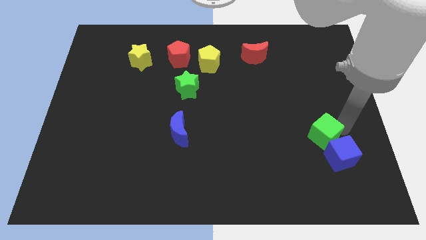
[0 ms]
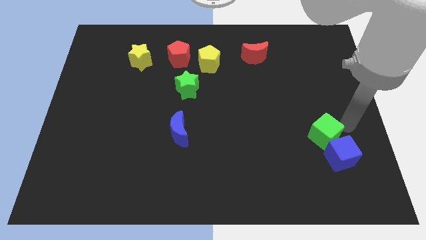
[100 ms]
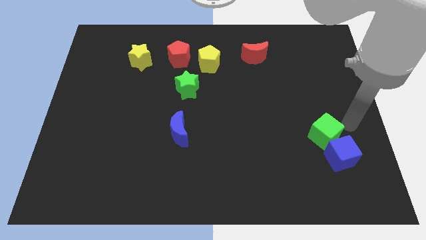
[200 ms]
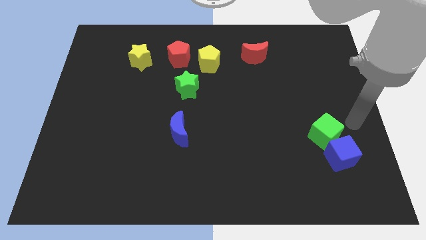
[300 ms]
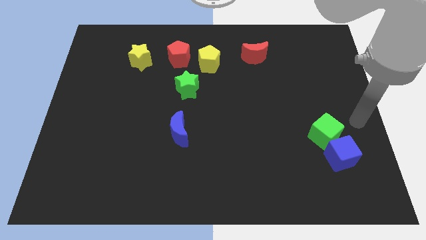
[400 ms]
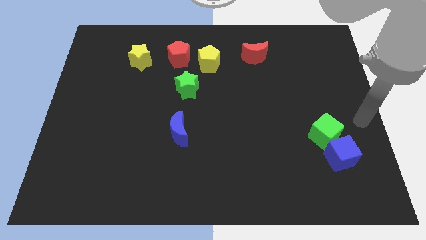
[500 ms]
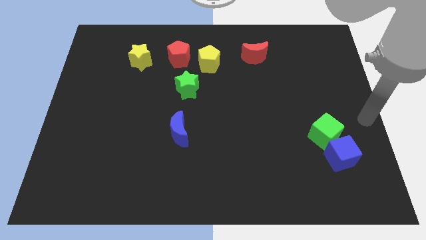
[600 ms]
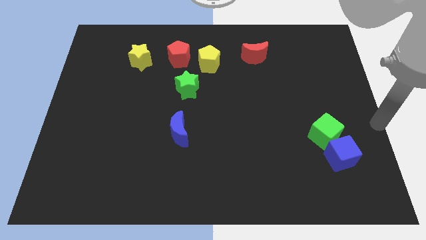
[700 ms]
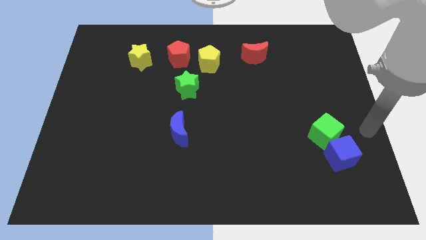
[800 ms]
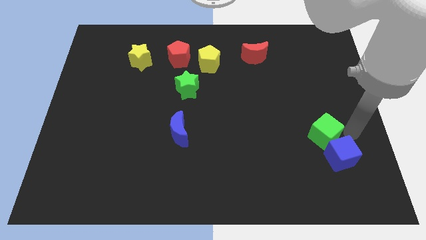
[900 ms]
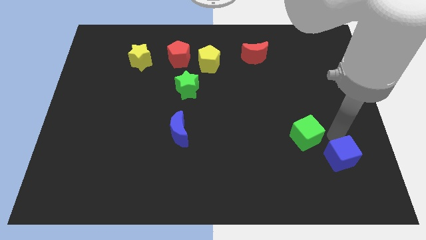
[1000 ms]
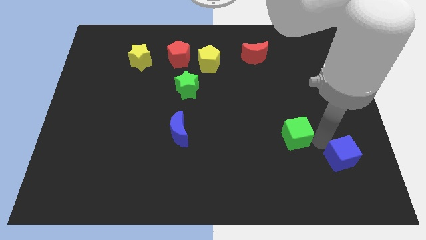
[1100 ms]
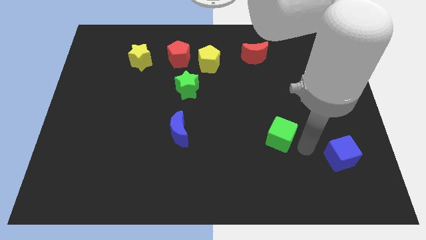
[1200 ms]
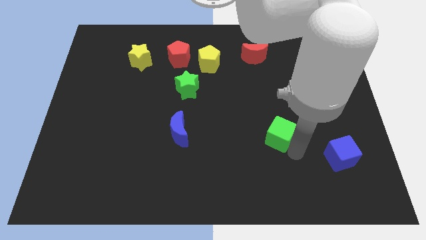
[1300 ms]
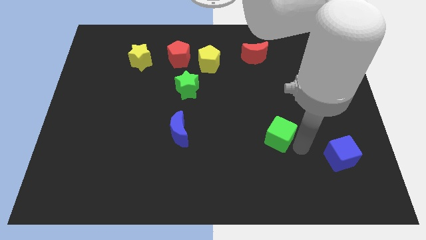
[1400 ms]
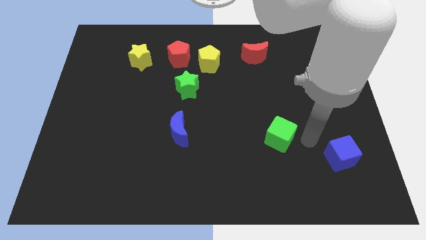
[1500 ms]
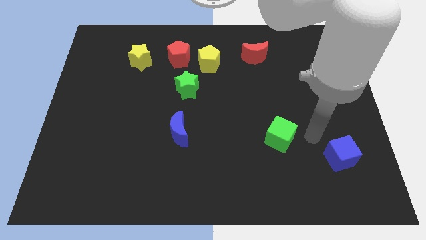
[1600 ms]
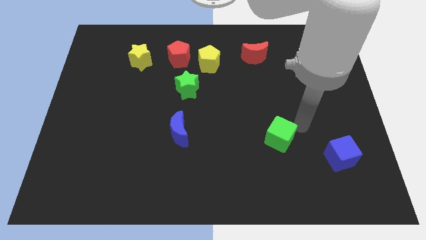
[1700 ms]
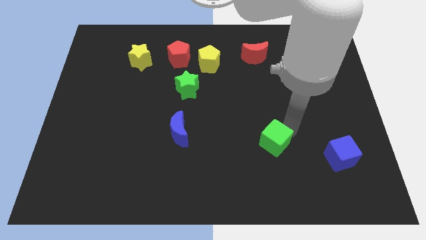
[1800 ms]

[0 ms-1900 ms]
slide the green cube horizontally to the right side of the blue moon

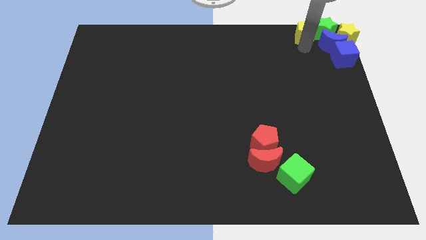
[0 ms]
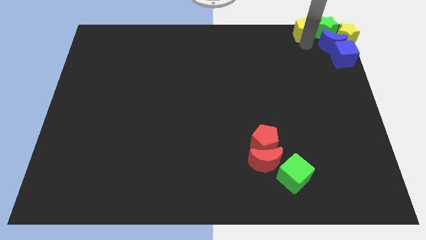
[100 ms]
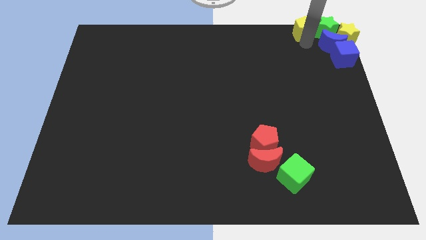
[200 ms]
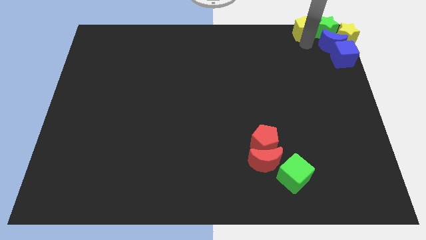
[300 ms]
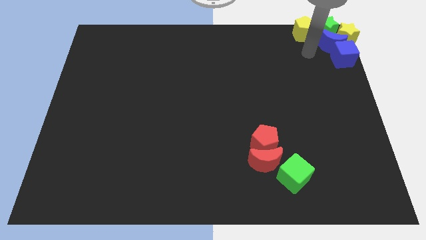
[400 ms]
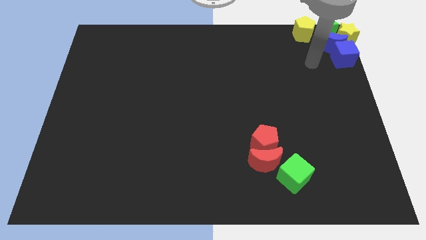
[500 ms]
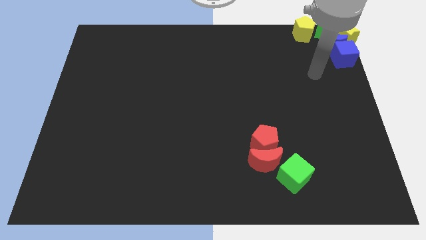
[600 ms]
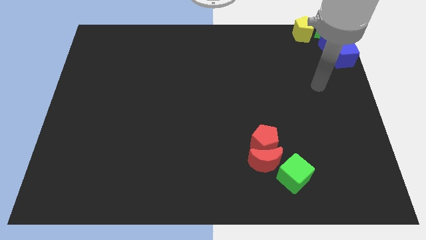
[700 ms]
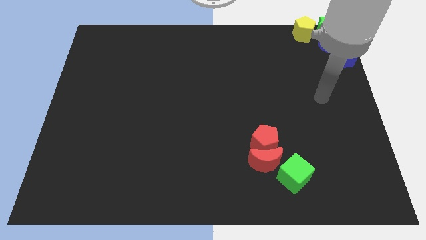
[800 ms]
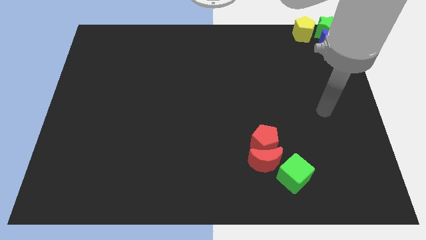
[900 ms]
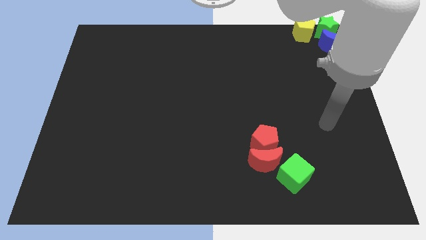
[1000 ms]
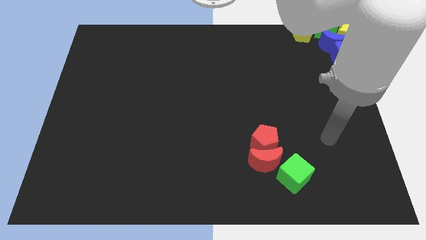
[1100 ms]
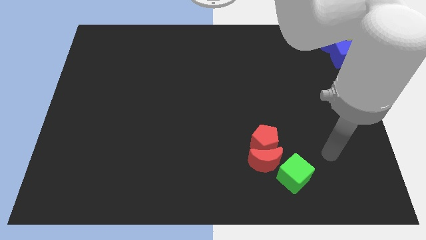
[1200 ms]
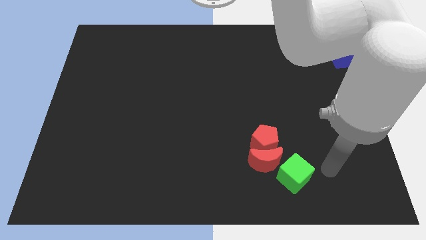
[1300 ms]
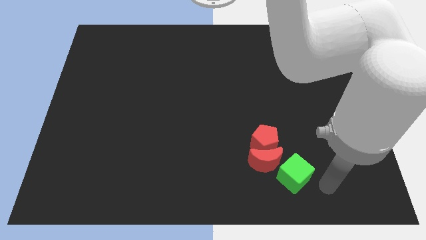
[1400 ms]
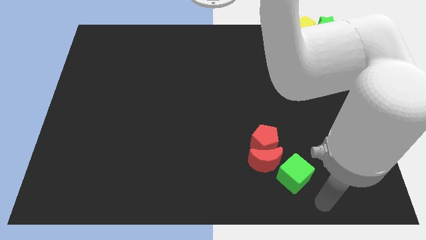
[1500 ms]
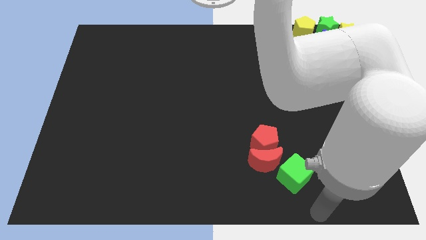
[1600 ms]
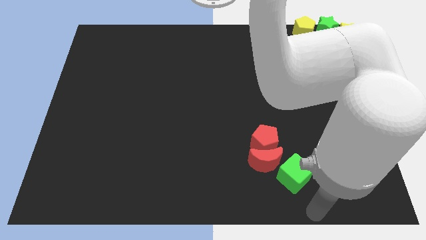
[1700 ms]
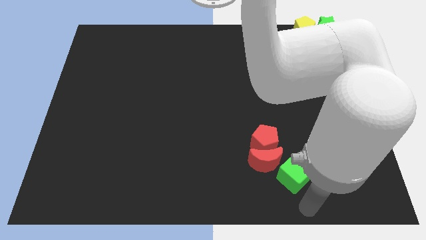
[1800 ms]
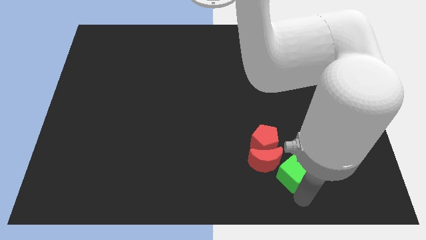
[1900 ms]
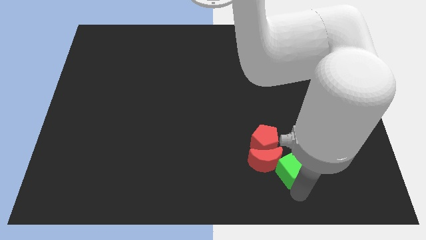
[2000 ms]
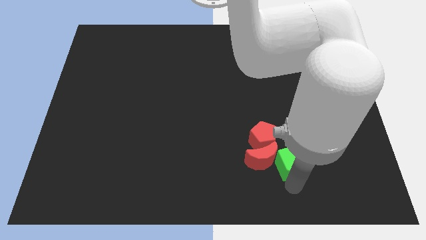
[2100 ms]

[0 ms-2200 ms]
move the arm away from the yellow pentagon

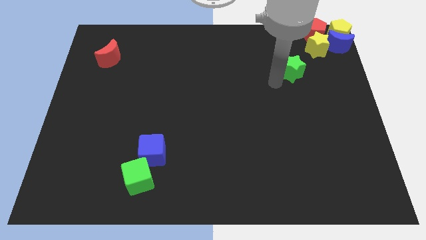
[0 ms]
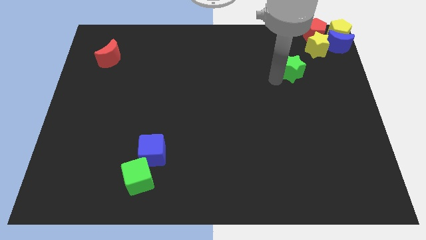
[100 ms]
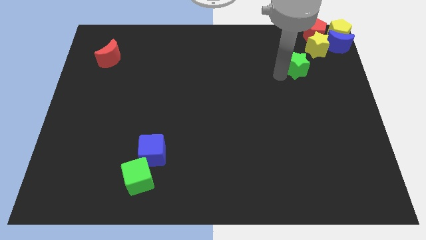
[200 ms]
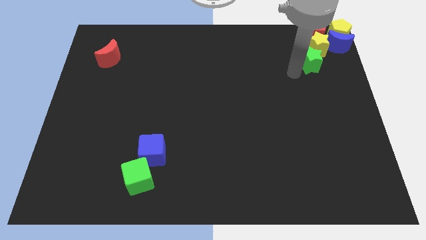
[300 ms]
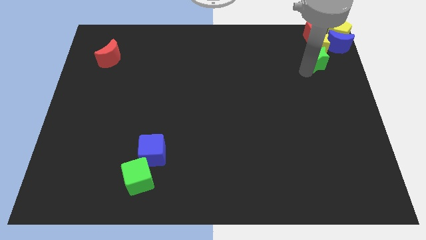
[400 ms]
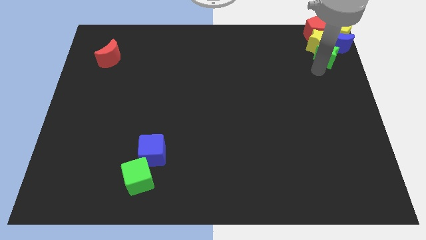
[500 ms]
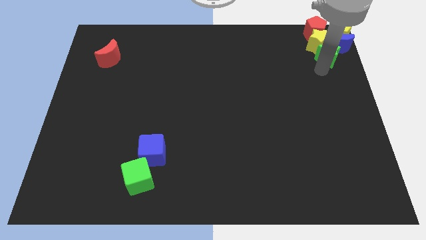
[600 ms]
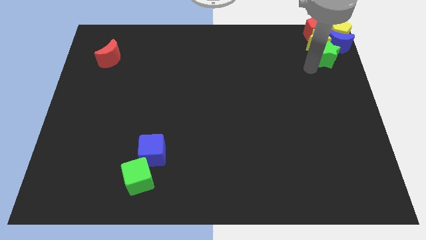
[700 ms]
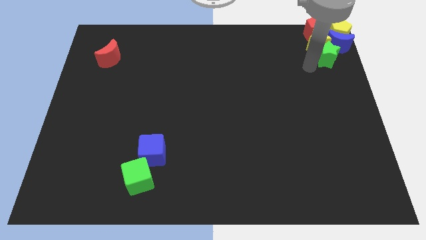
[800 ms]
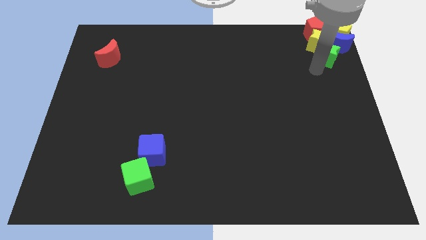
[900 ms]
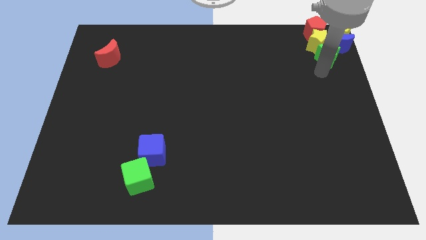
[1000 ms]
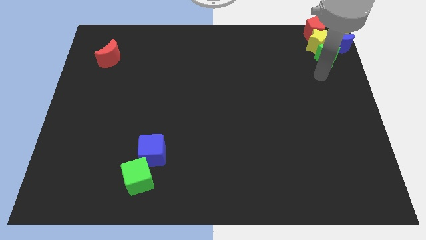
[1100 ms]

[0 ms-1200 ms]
move the green star to the group of blocks

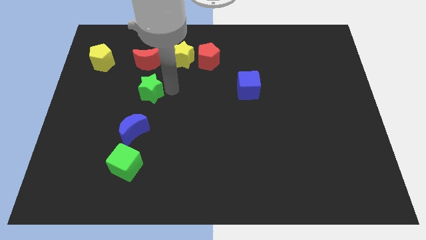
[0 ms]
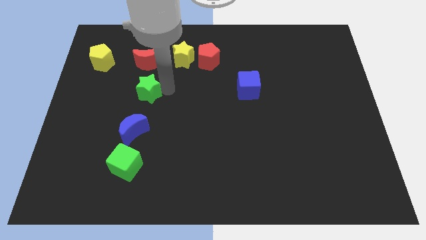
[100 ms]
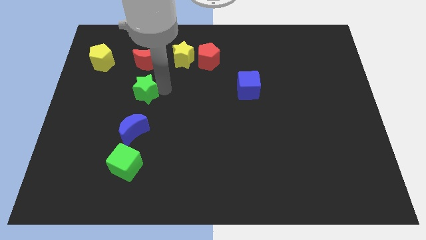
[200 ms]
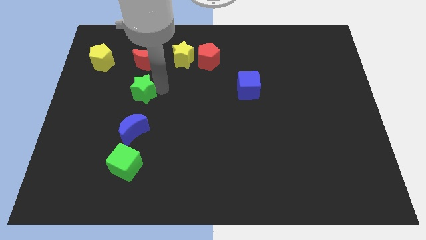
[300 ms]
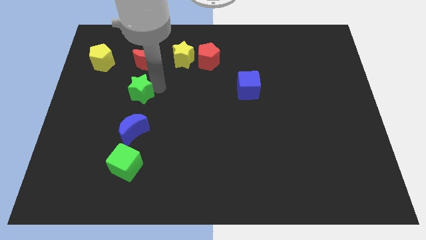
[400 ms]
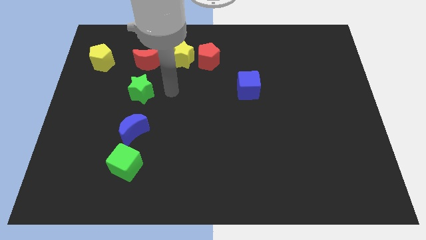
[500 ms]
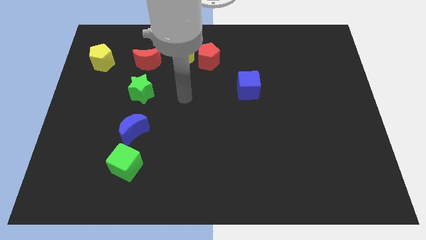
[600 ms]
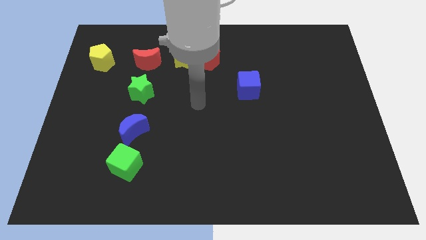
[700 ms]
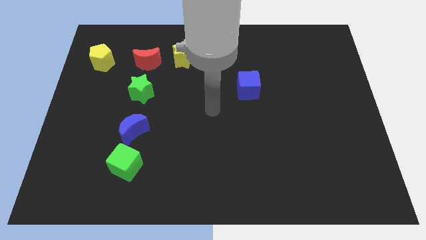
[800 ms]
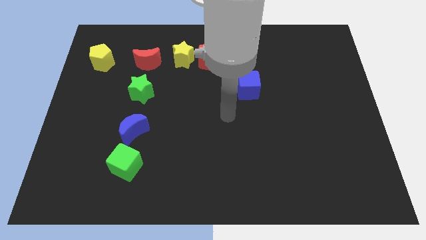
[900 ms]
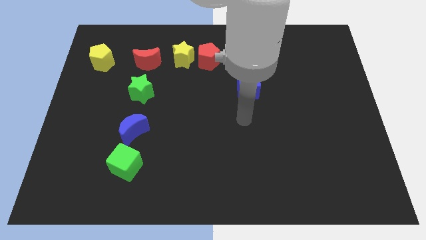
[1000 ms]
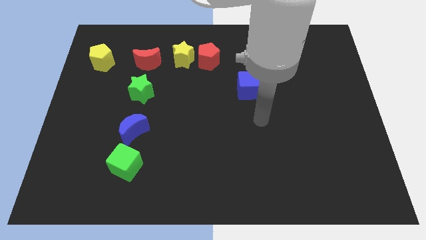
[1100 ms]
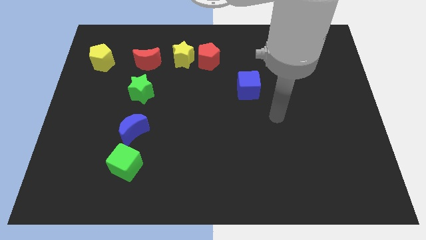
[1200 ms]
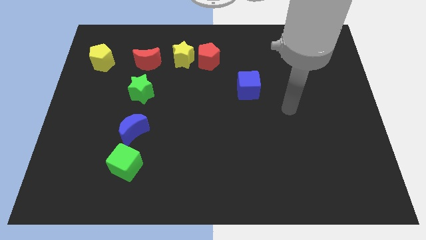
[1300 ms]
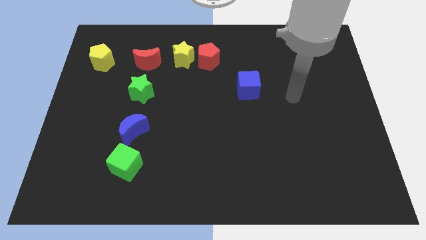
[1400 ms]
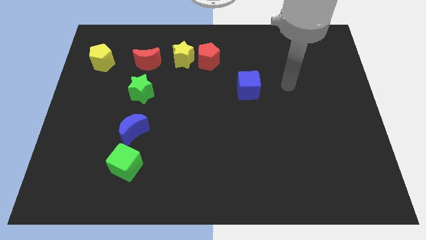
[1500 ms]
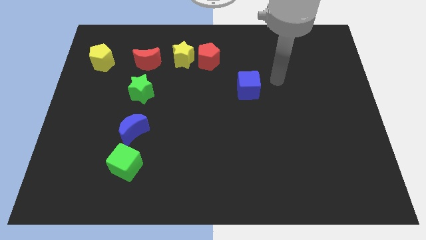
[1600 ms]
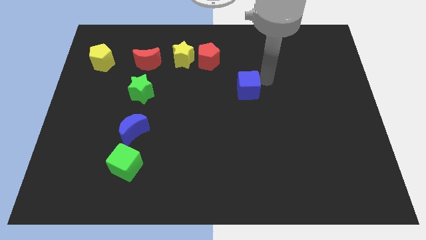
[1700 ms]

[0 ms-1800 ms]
point arm right beside blue cube

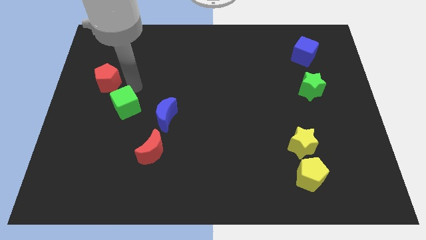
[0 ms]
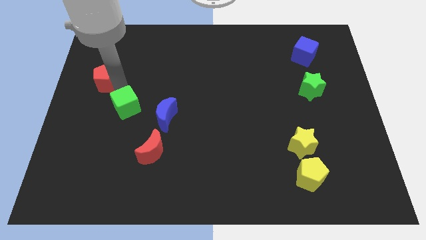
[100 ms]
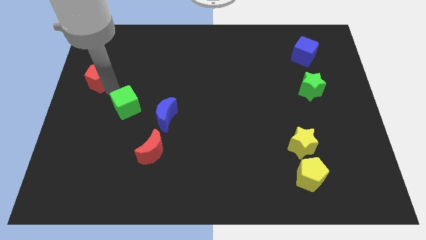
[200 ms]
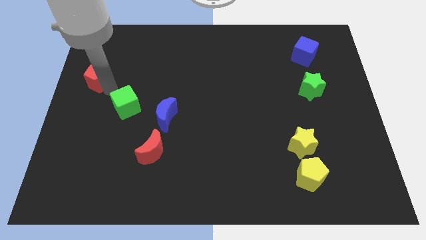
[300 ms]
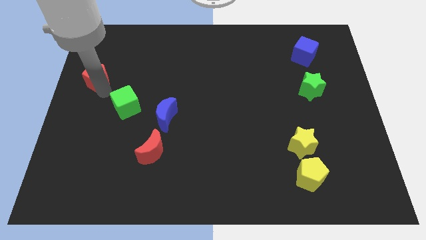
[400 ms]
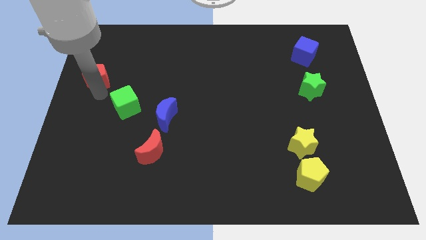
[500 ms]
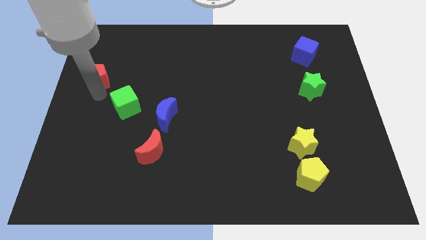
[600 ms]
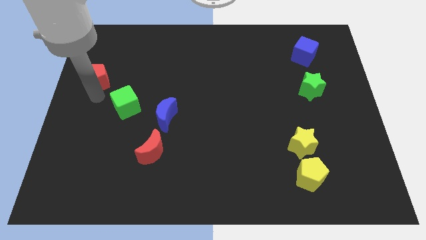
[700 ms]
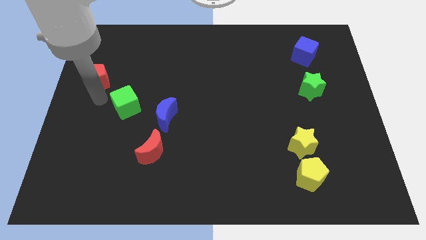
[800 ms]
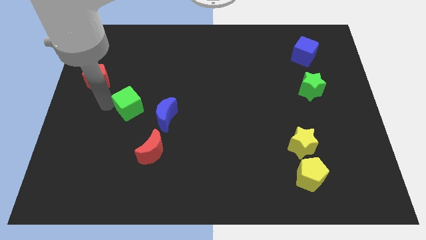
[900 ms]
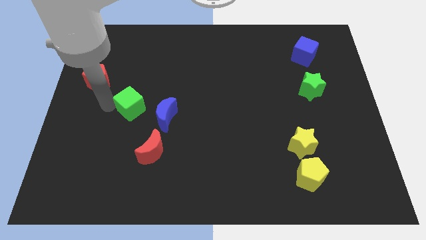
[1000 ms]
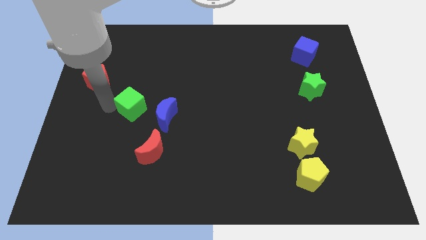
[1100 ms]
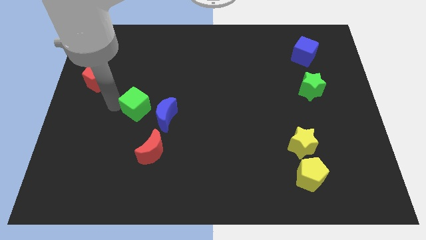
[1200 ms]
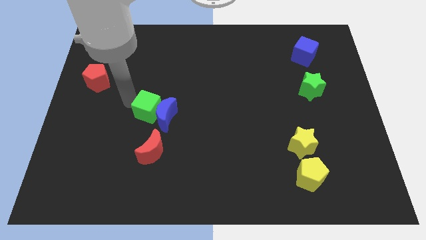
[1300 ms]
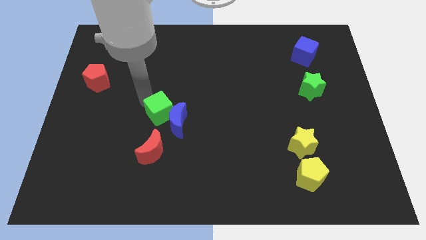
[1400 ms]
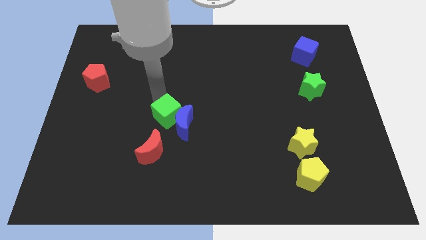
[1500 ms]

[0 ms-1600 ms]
move the green cube into the blue moon

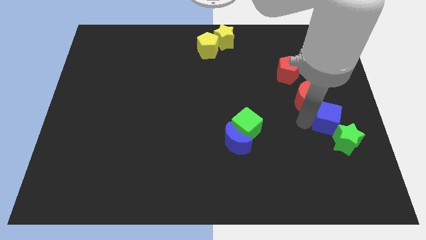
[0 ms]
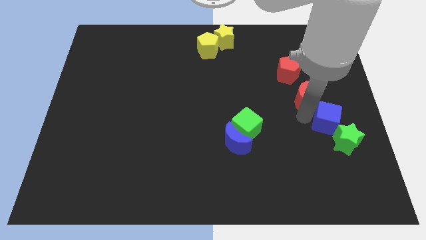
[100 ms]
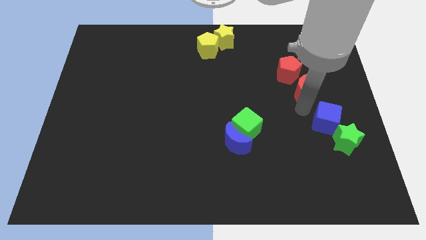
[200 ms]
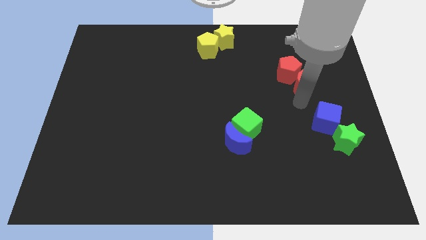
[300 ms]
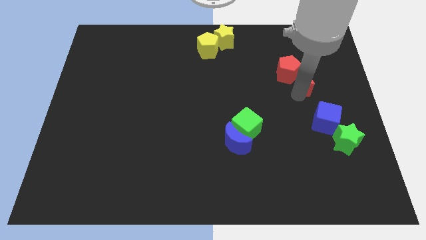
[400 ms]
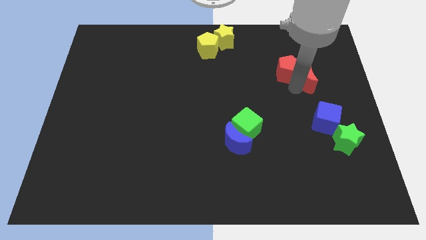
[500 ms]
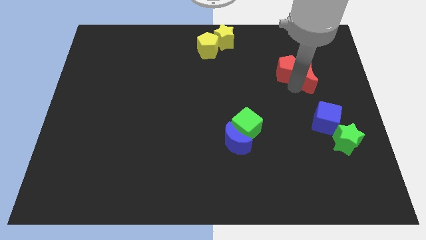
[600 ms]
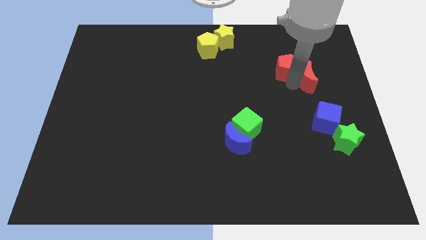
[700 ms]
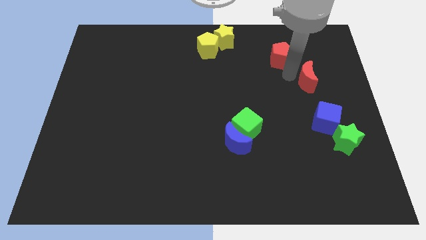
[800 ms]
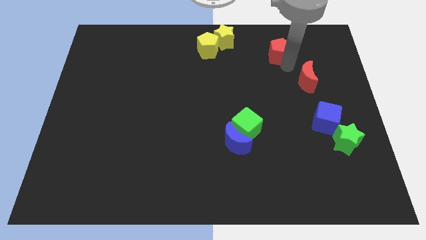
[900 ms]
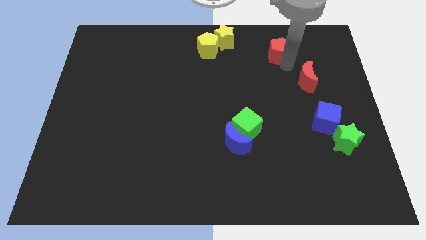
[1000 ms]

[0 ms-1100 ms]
push the red pentagon towards the top side
